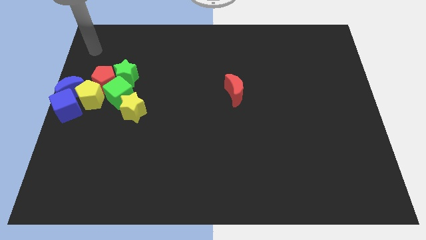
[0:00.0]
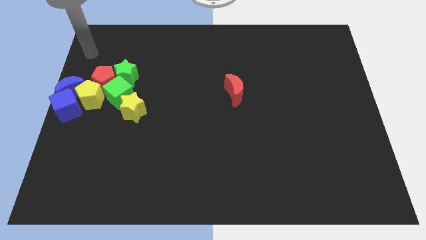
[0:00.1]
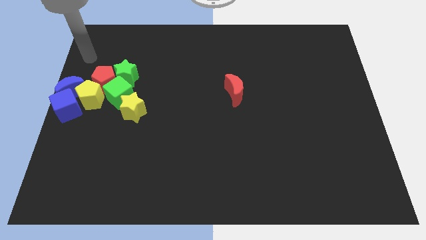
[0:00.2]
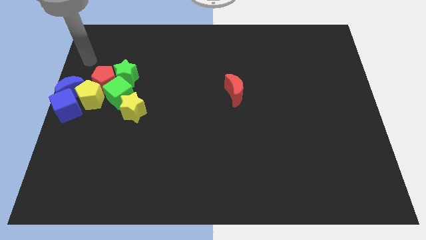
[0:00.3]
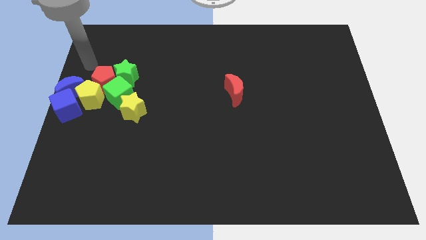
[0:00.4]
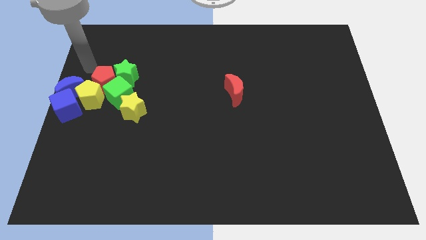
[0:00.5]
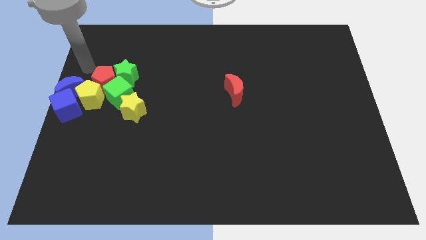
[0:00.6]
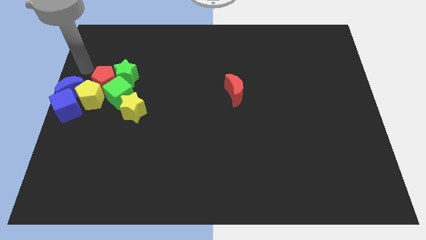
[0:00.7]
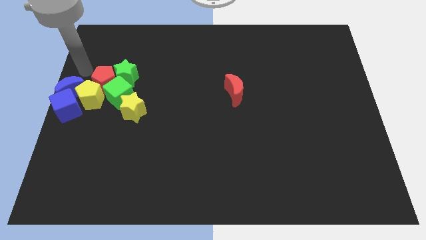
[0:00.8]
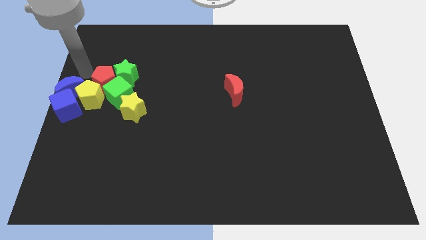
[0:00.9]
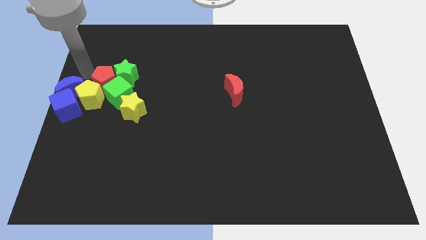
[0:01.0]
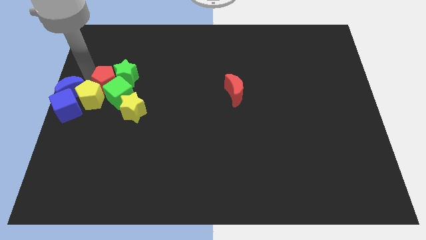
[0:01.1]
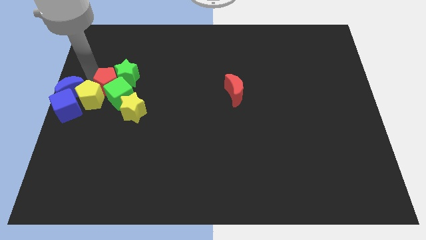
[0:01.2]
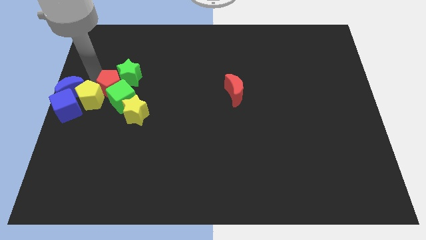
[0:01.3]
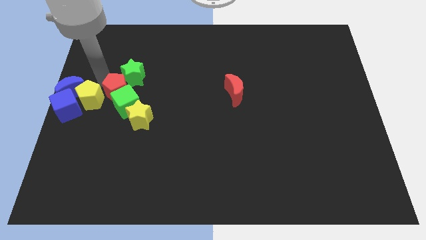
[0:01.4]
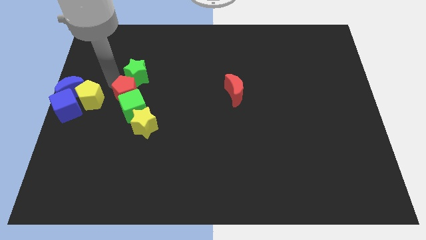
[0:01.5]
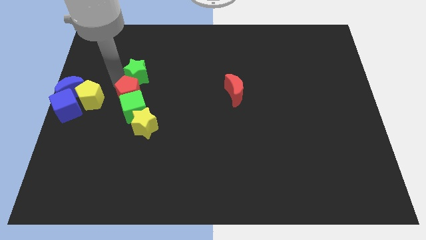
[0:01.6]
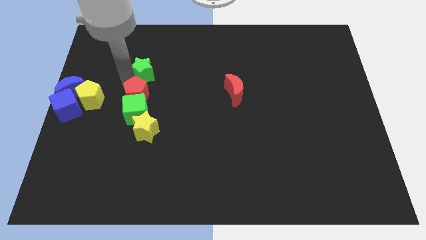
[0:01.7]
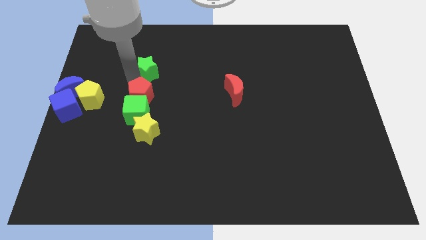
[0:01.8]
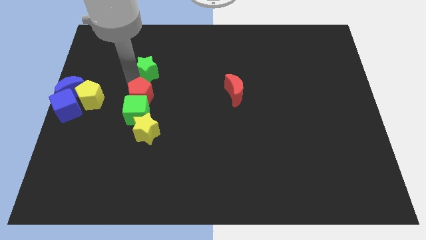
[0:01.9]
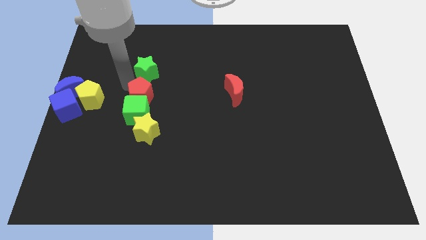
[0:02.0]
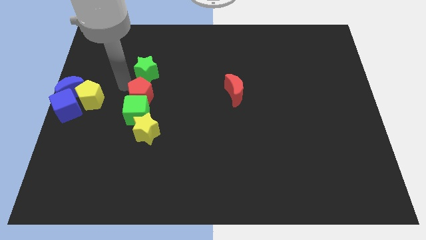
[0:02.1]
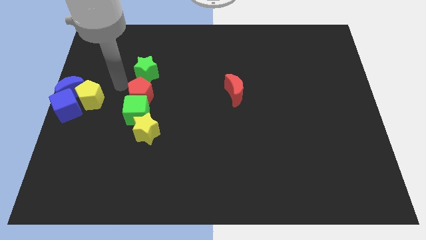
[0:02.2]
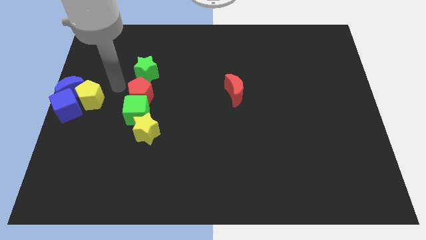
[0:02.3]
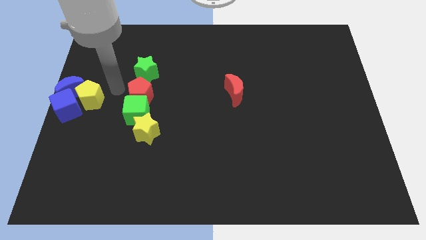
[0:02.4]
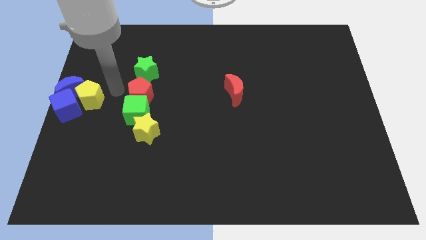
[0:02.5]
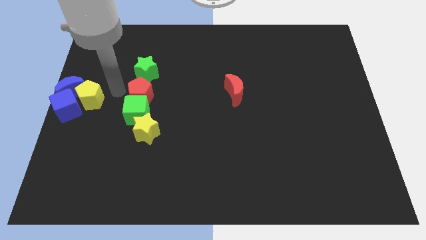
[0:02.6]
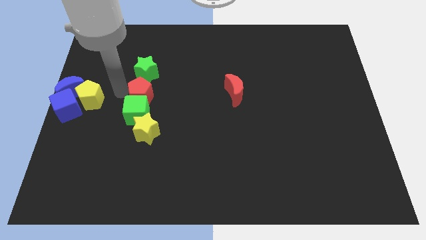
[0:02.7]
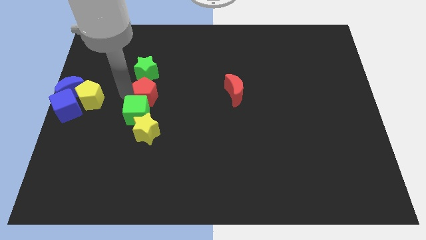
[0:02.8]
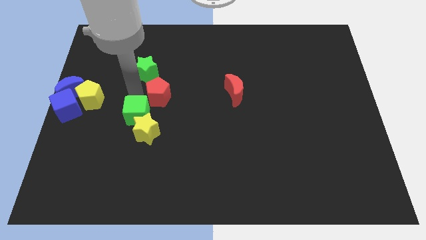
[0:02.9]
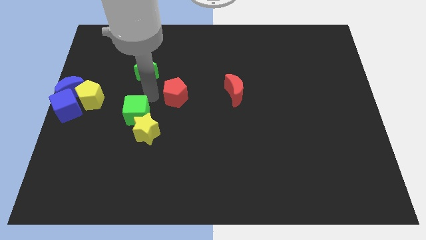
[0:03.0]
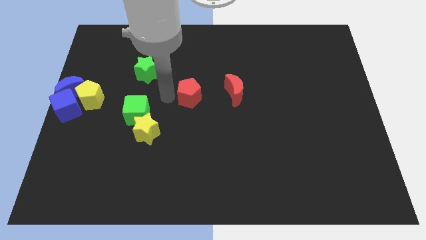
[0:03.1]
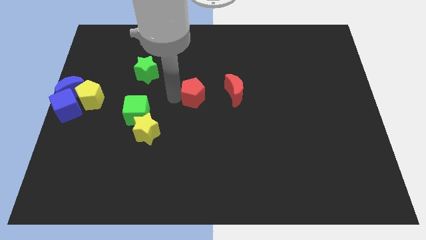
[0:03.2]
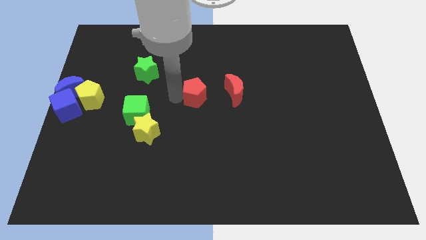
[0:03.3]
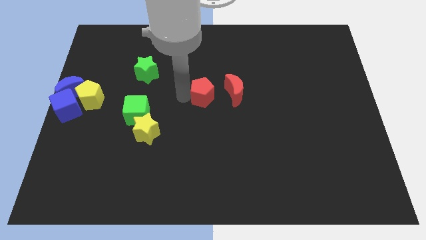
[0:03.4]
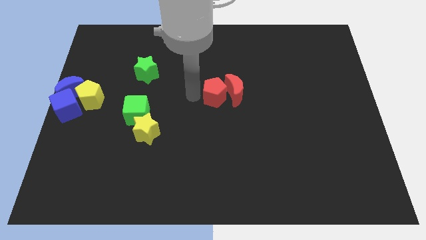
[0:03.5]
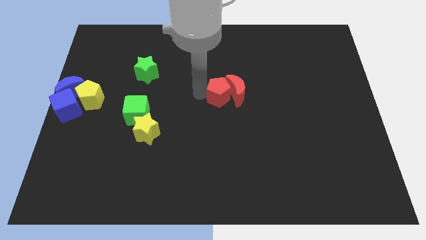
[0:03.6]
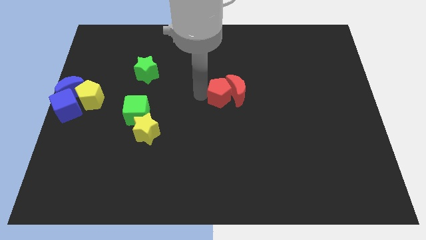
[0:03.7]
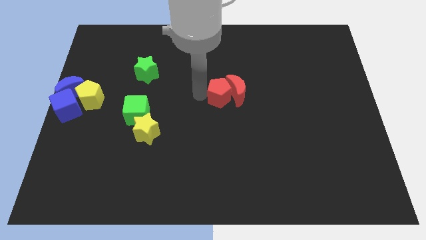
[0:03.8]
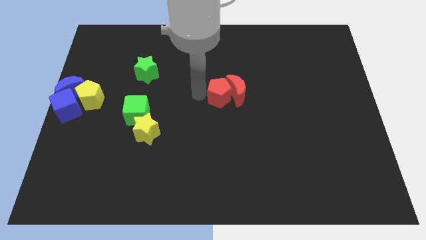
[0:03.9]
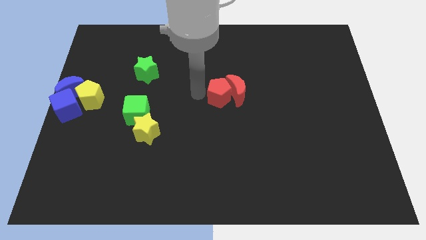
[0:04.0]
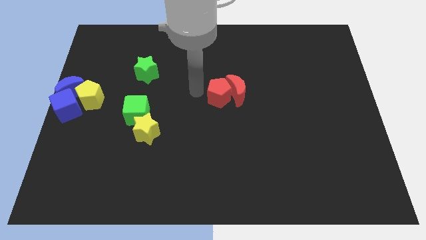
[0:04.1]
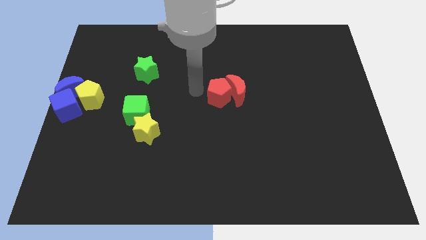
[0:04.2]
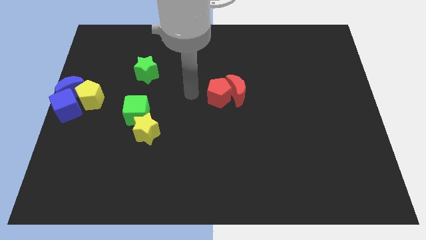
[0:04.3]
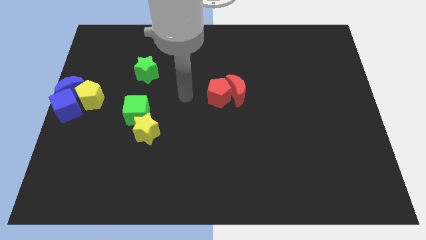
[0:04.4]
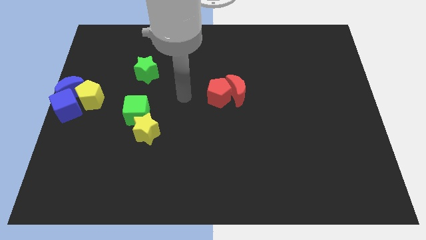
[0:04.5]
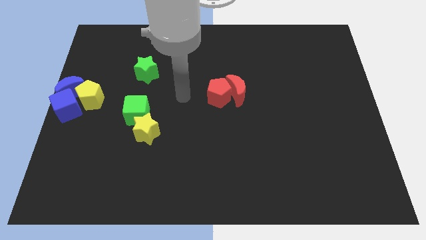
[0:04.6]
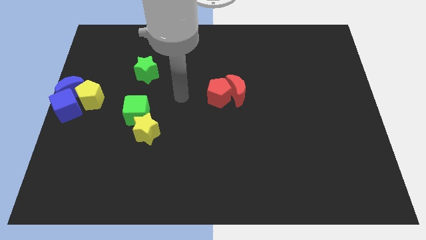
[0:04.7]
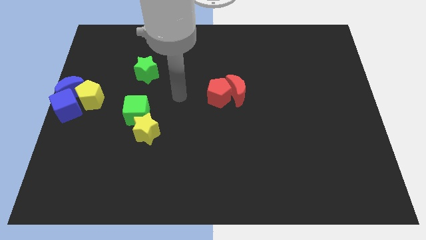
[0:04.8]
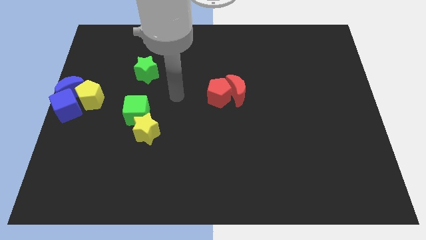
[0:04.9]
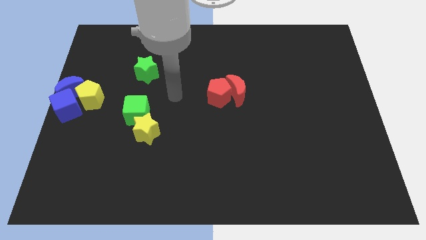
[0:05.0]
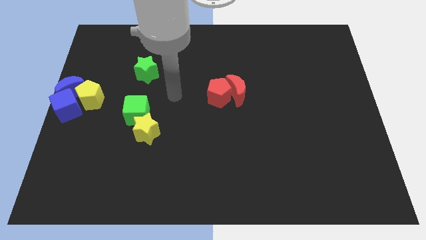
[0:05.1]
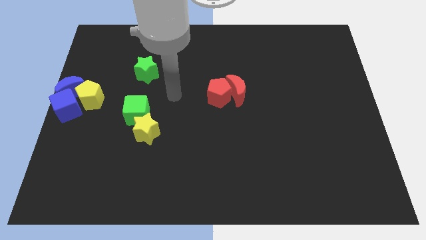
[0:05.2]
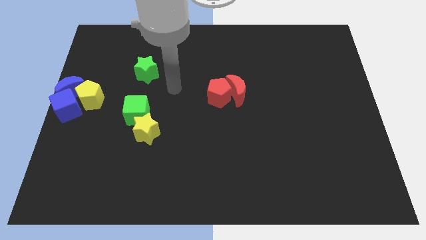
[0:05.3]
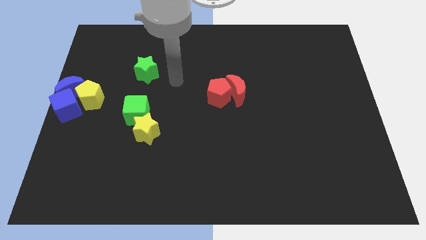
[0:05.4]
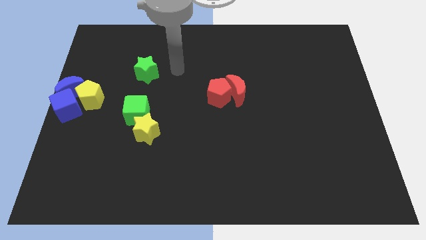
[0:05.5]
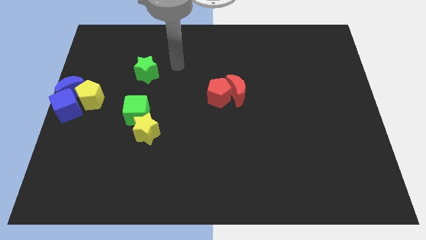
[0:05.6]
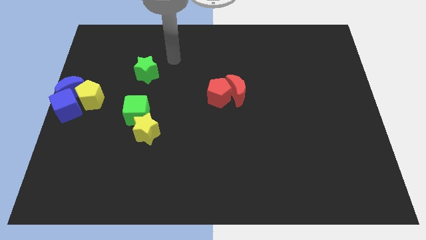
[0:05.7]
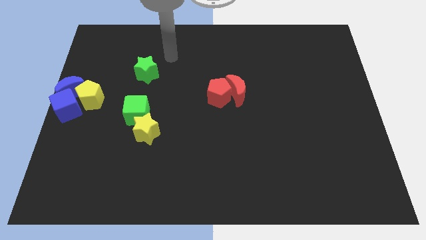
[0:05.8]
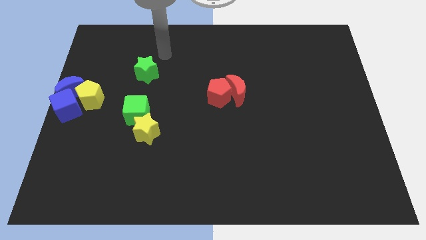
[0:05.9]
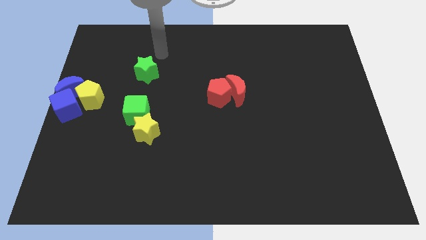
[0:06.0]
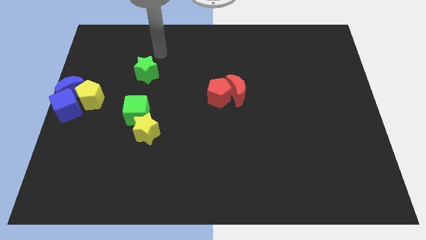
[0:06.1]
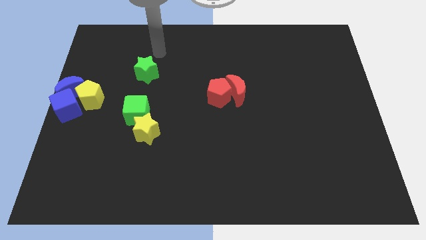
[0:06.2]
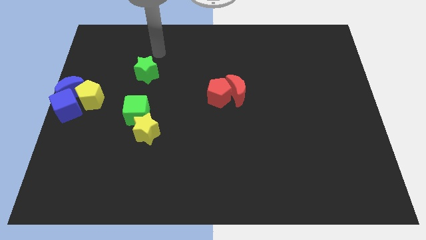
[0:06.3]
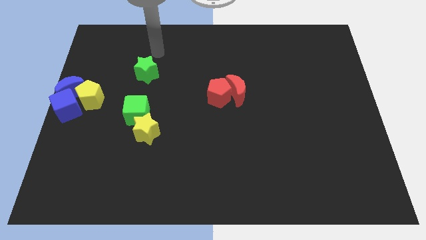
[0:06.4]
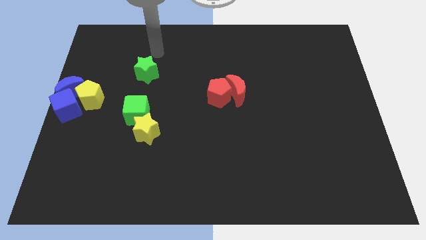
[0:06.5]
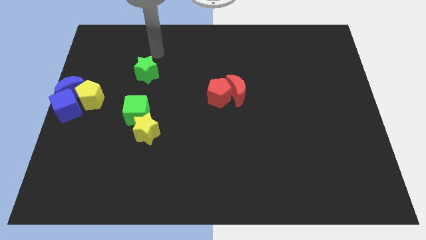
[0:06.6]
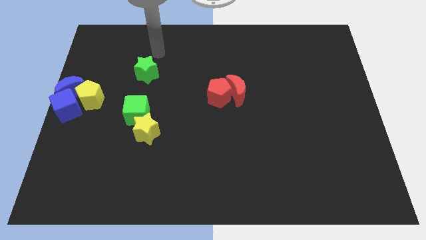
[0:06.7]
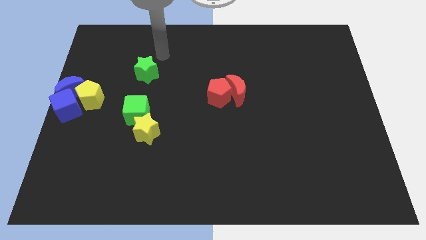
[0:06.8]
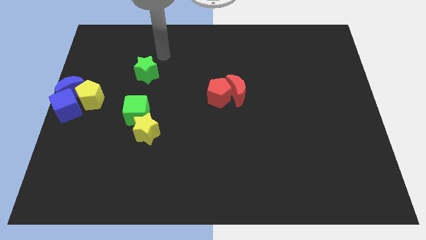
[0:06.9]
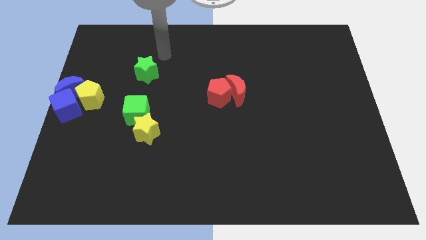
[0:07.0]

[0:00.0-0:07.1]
move the red pentagon into the left side of the red moon

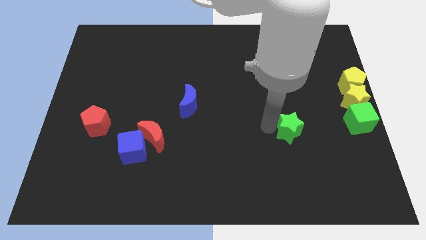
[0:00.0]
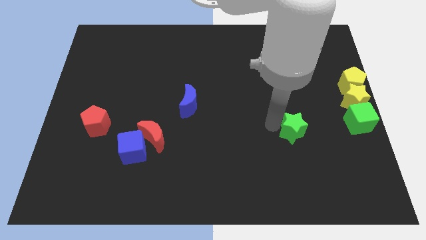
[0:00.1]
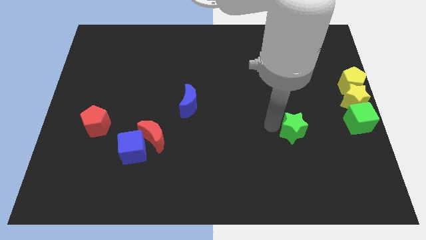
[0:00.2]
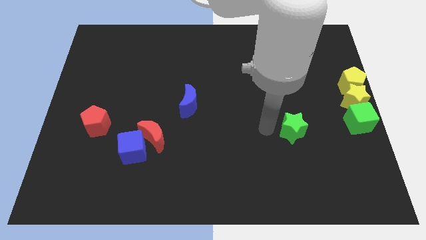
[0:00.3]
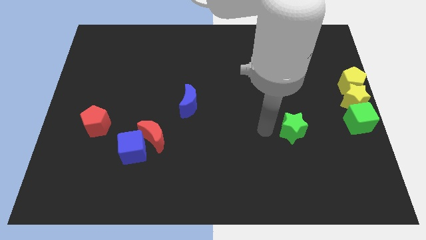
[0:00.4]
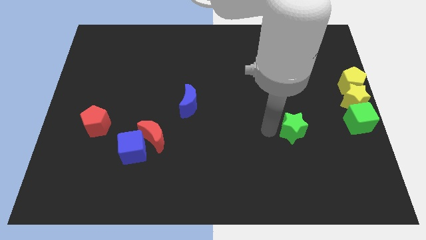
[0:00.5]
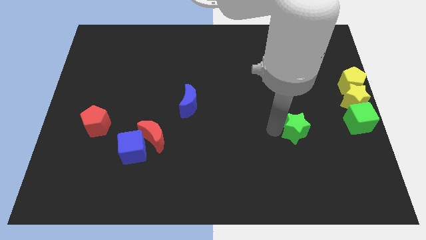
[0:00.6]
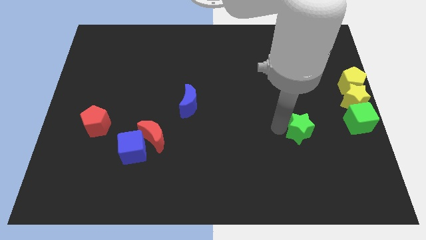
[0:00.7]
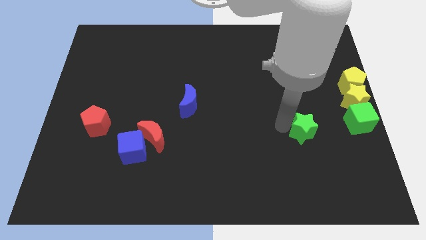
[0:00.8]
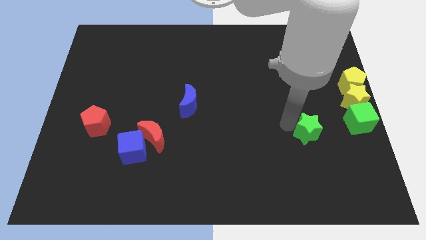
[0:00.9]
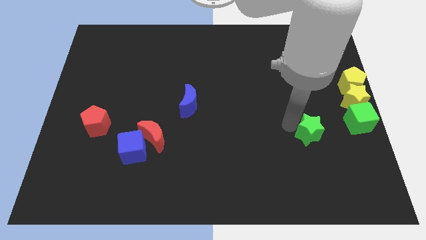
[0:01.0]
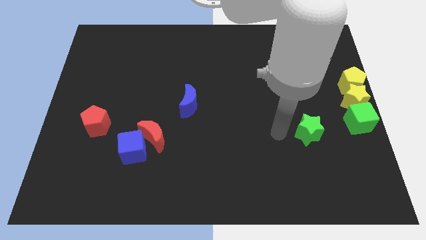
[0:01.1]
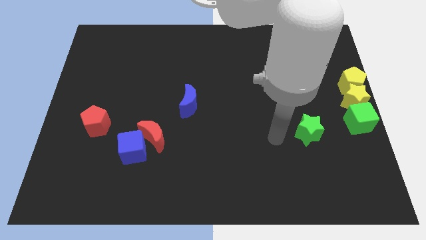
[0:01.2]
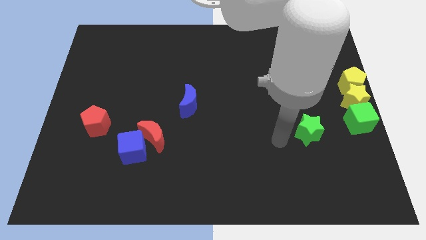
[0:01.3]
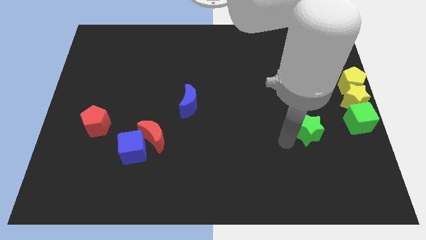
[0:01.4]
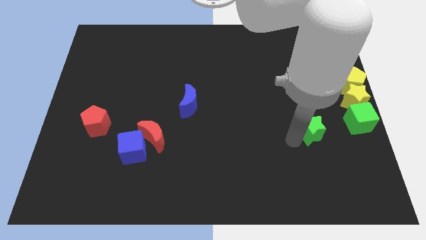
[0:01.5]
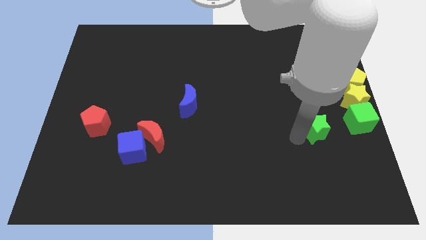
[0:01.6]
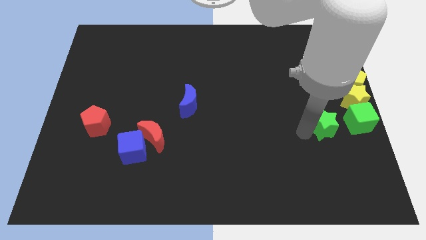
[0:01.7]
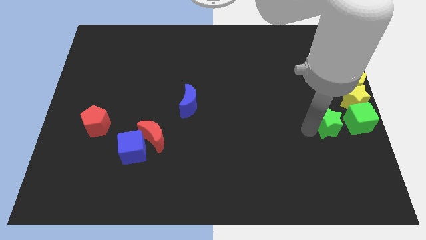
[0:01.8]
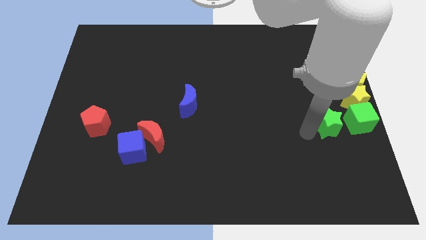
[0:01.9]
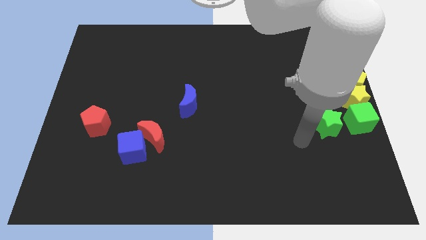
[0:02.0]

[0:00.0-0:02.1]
place the green star to the left side of the green cube
